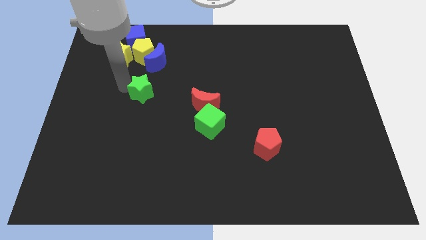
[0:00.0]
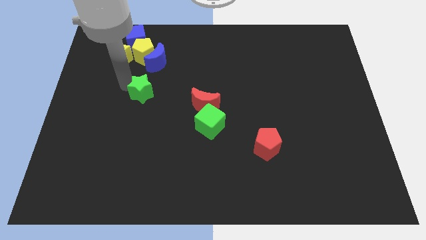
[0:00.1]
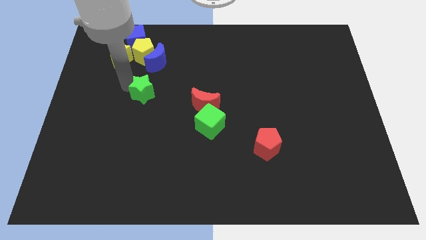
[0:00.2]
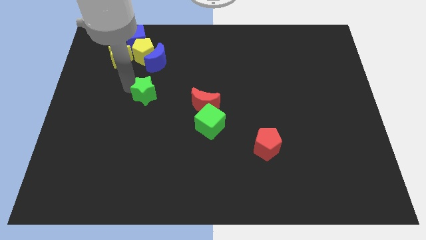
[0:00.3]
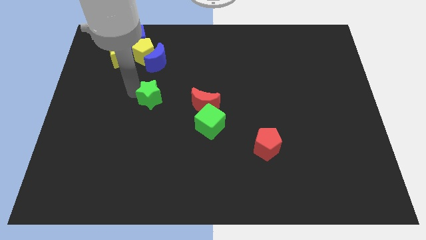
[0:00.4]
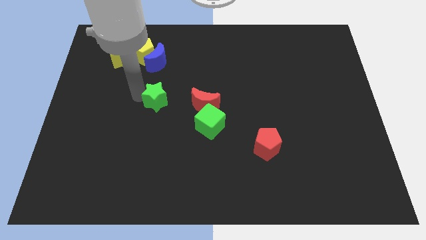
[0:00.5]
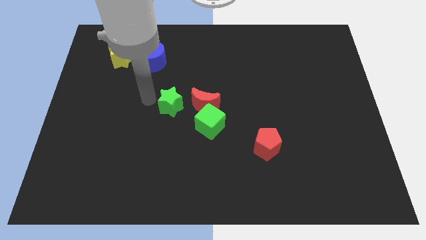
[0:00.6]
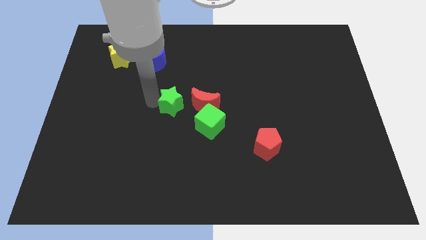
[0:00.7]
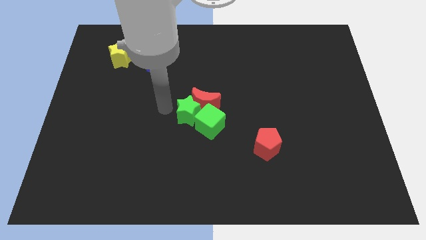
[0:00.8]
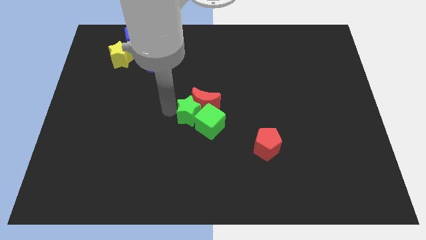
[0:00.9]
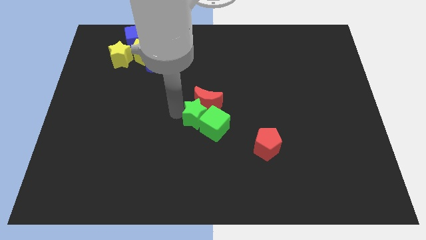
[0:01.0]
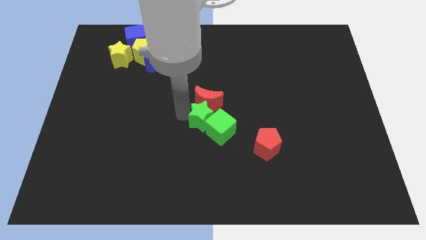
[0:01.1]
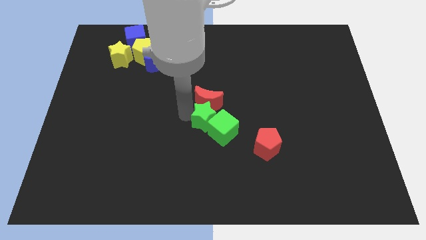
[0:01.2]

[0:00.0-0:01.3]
push the green star into the green cube

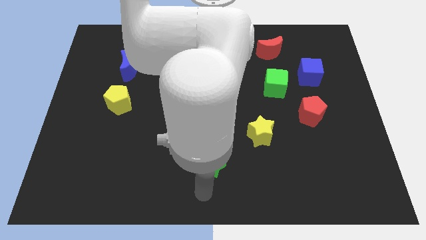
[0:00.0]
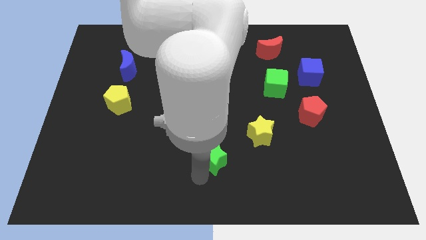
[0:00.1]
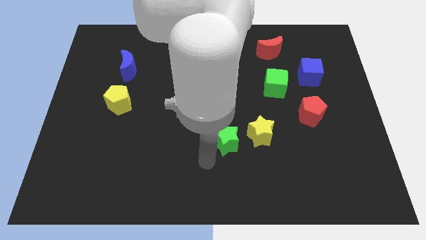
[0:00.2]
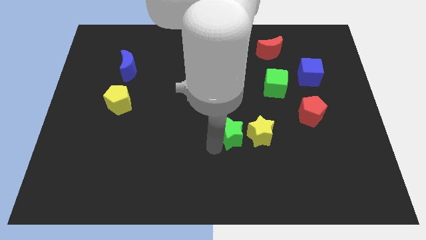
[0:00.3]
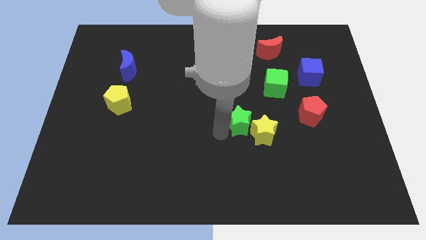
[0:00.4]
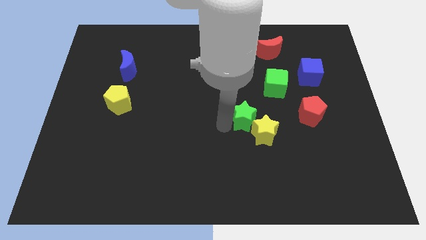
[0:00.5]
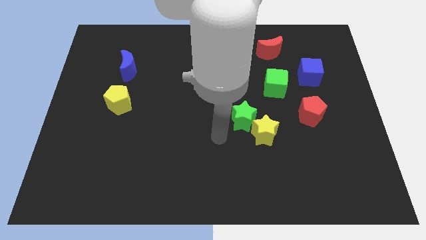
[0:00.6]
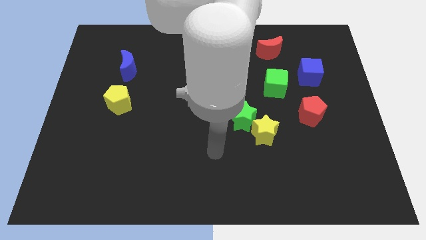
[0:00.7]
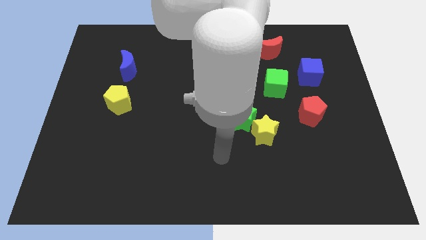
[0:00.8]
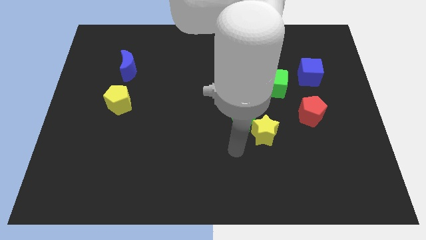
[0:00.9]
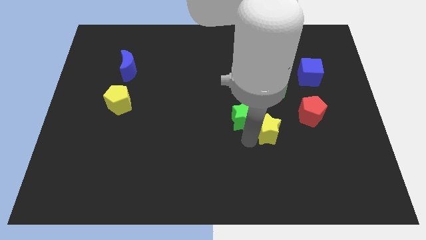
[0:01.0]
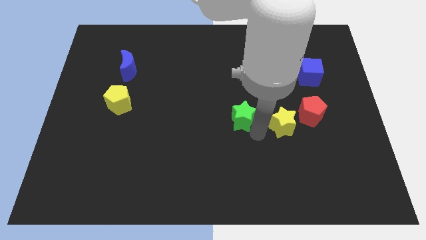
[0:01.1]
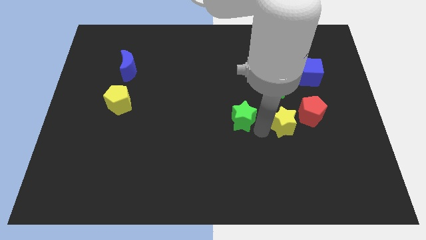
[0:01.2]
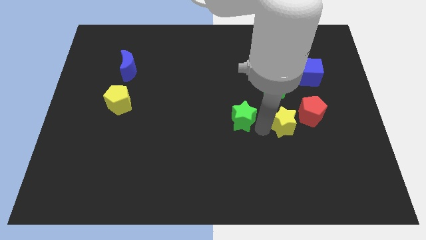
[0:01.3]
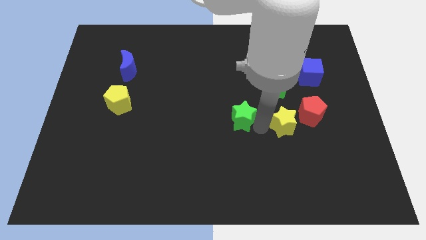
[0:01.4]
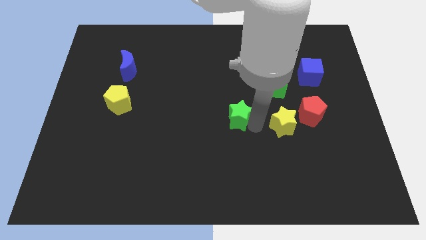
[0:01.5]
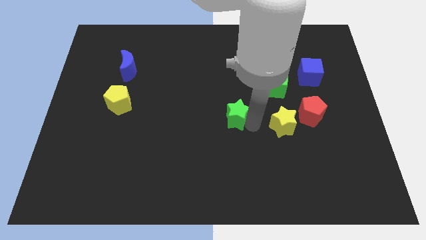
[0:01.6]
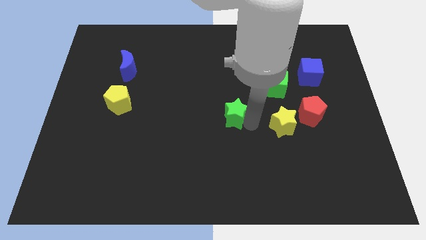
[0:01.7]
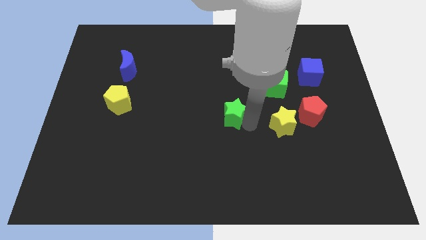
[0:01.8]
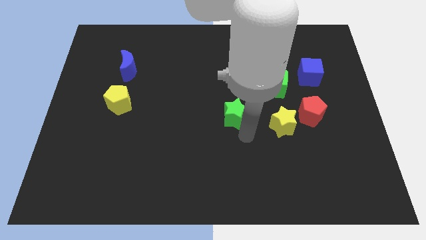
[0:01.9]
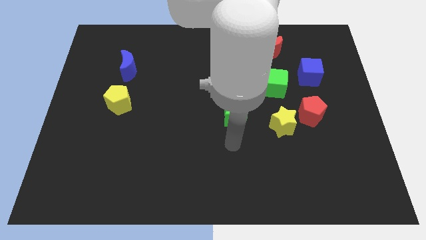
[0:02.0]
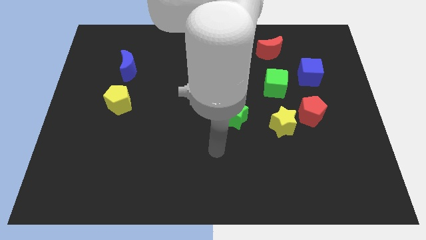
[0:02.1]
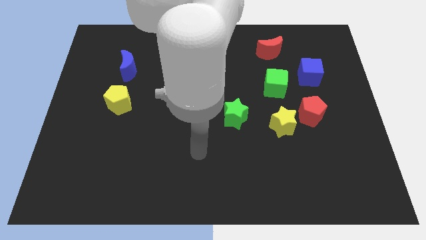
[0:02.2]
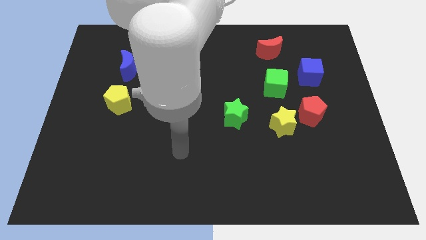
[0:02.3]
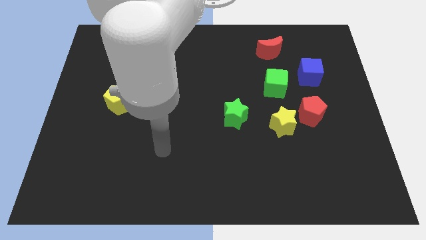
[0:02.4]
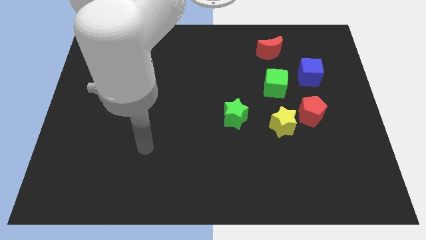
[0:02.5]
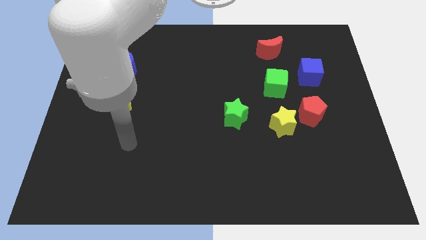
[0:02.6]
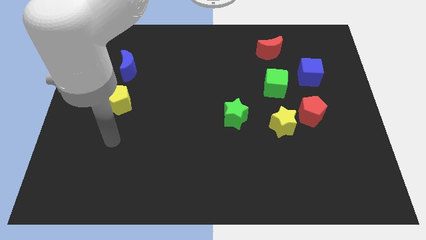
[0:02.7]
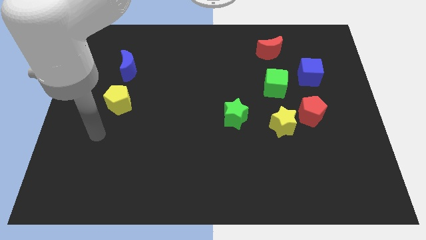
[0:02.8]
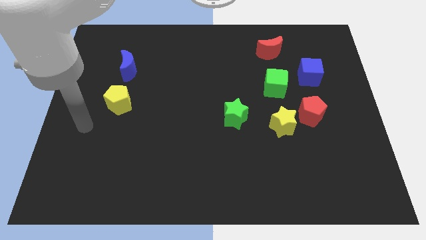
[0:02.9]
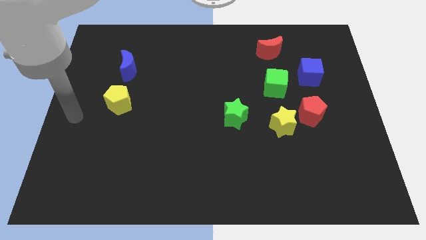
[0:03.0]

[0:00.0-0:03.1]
separate the green star from yellow star

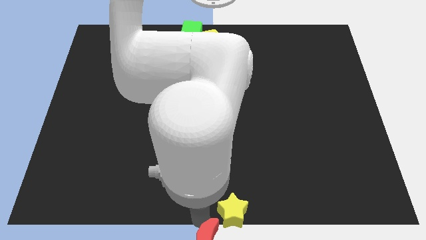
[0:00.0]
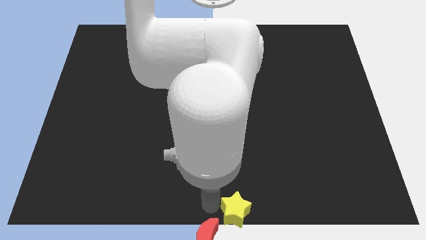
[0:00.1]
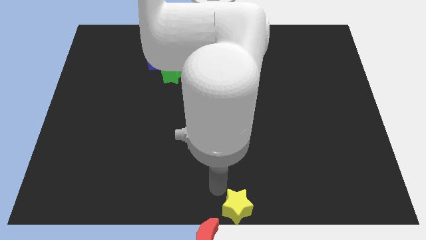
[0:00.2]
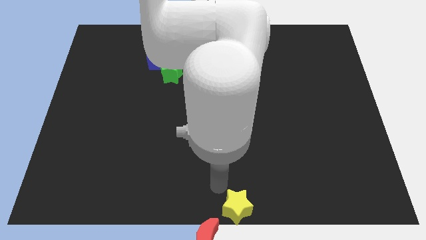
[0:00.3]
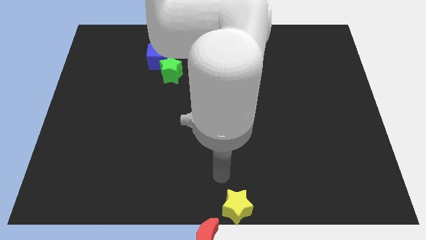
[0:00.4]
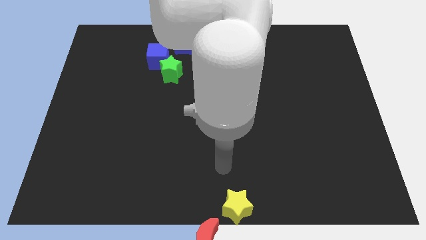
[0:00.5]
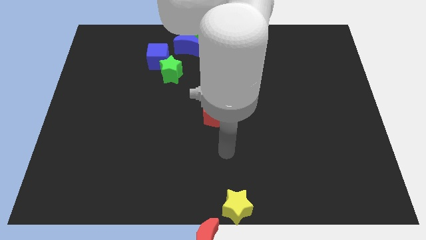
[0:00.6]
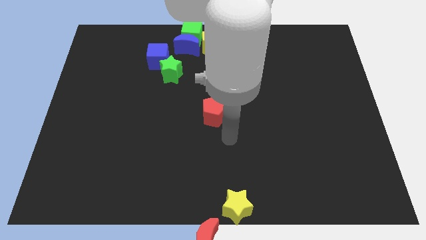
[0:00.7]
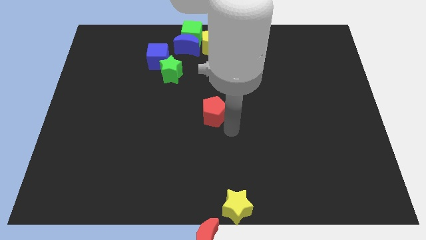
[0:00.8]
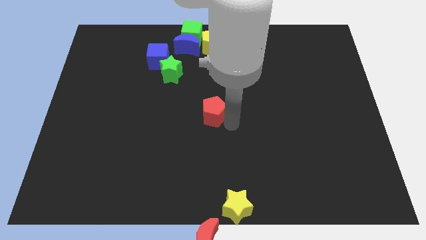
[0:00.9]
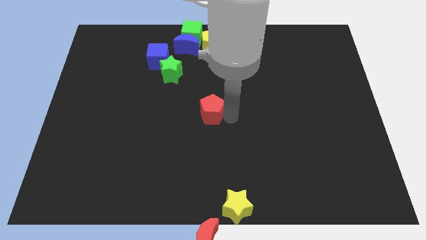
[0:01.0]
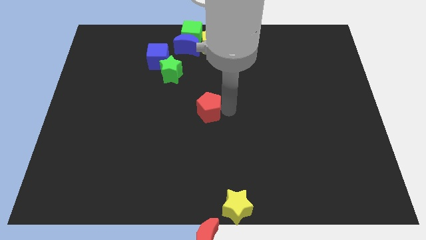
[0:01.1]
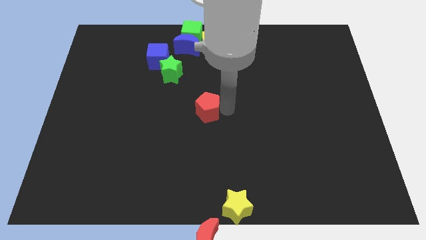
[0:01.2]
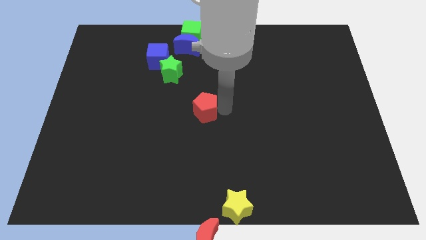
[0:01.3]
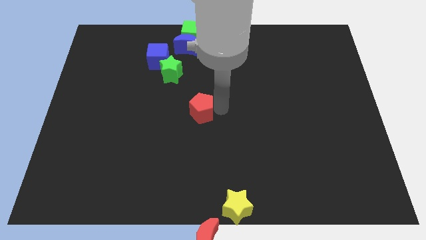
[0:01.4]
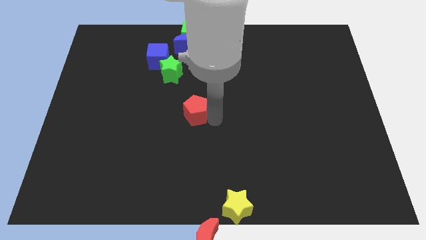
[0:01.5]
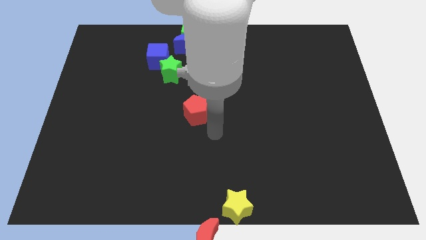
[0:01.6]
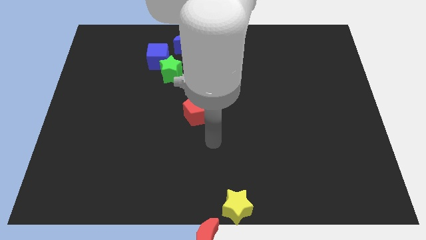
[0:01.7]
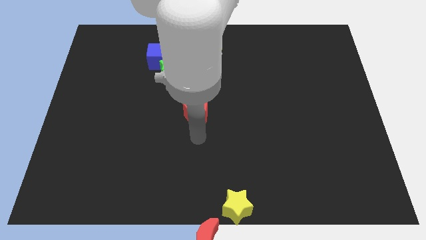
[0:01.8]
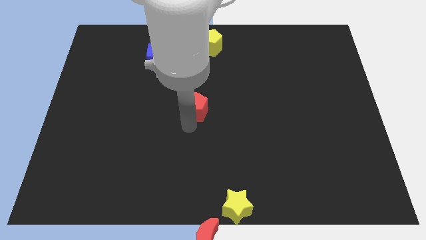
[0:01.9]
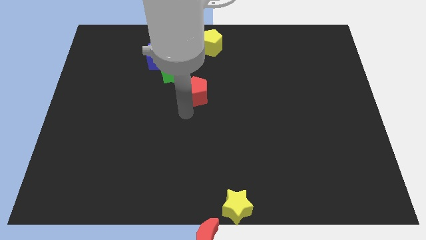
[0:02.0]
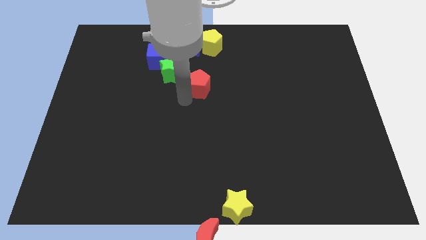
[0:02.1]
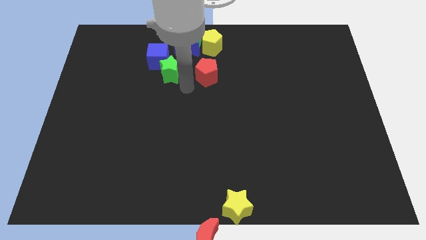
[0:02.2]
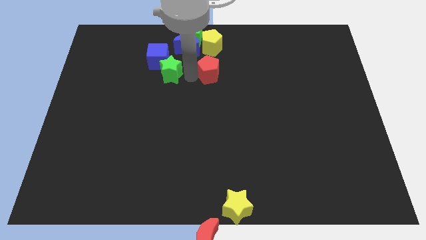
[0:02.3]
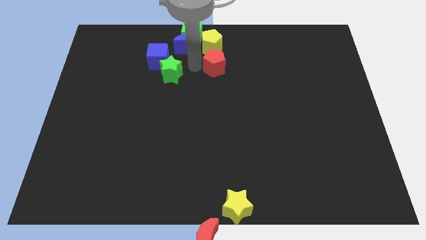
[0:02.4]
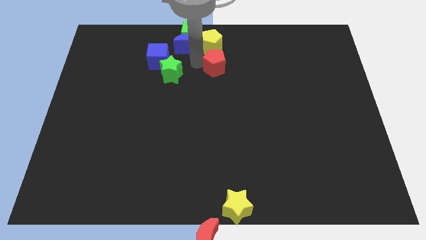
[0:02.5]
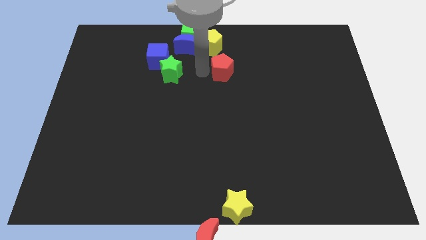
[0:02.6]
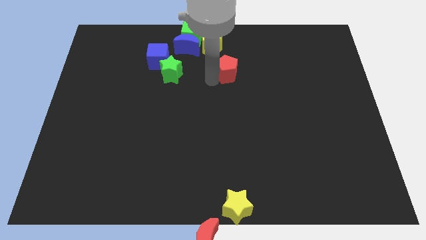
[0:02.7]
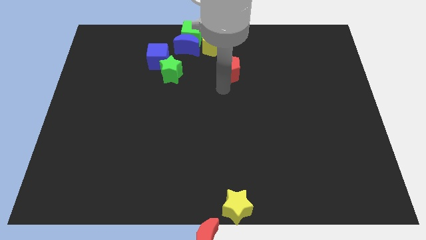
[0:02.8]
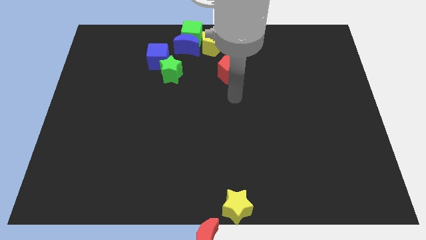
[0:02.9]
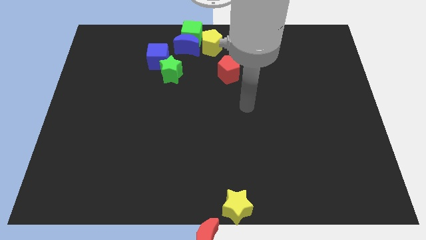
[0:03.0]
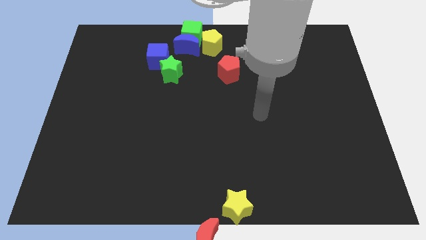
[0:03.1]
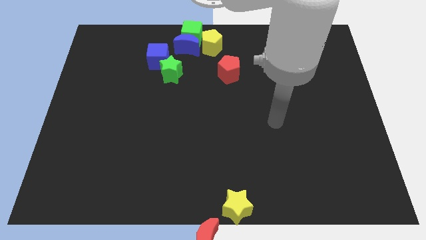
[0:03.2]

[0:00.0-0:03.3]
move the red pentagon diagonally below the bottom right side of the yellow pentagon

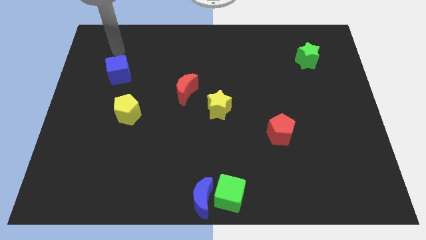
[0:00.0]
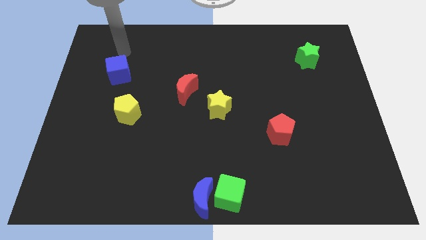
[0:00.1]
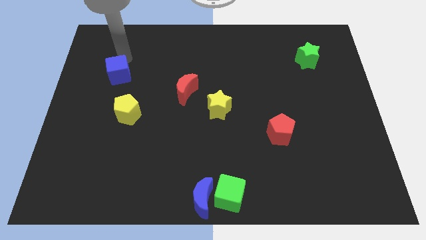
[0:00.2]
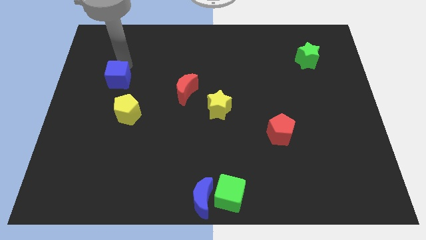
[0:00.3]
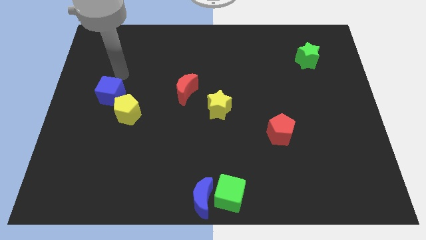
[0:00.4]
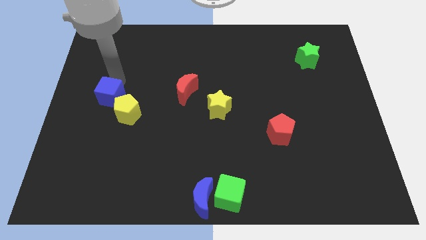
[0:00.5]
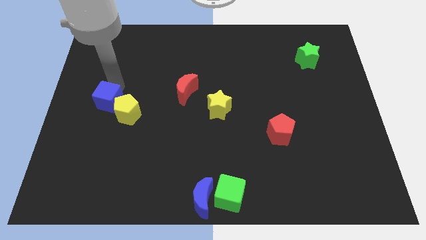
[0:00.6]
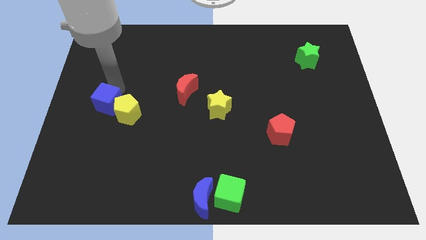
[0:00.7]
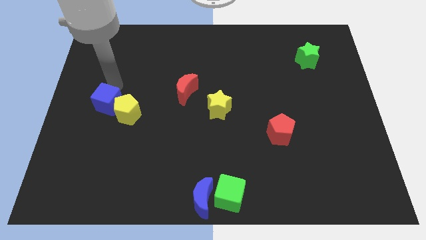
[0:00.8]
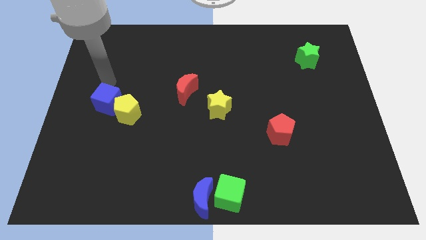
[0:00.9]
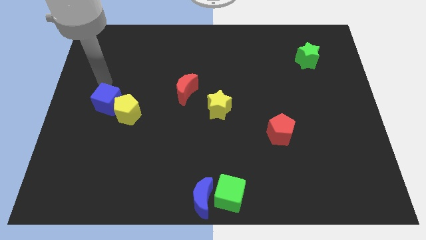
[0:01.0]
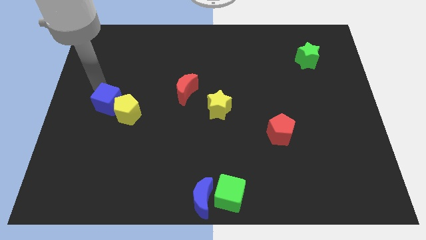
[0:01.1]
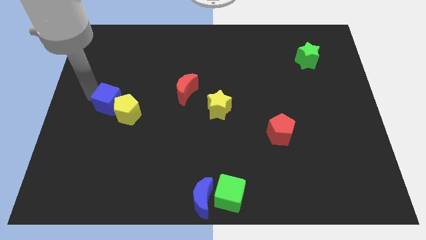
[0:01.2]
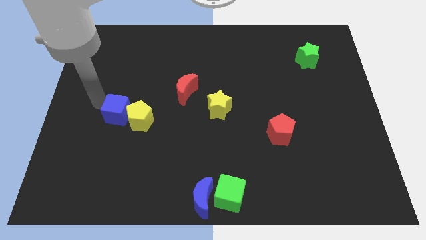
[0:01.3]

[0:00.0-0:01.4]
place blue cube on above the yellow pentagon
